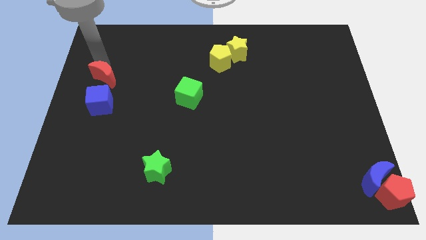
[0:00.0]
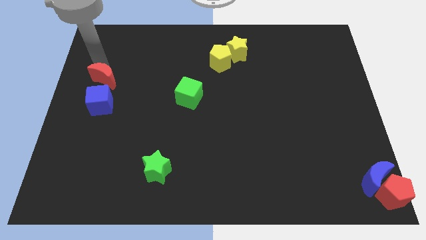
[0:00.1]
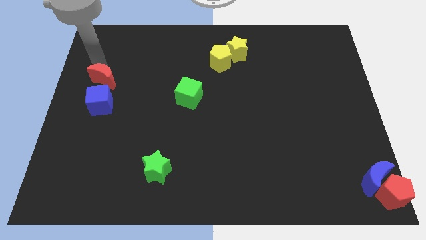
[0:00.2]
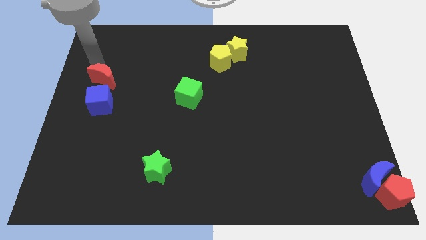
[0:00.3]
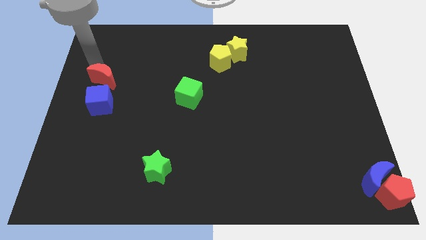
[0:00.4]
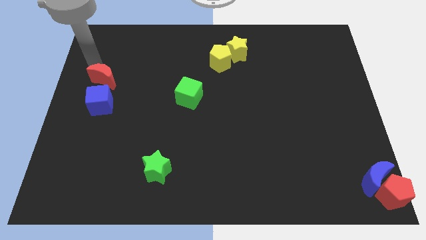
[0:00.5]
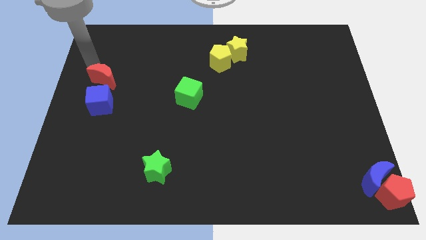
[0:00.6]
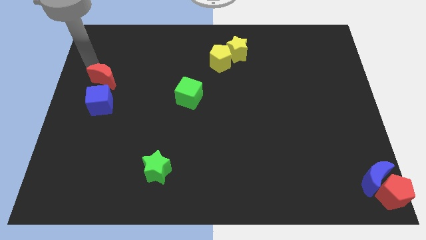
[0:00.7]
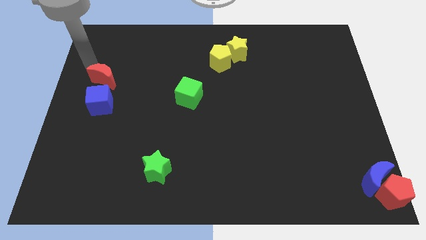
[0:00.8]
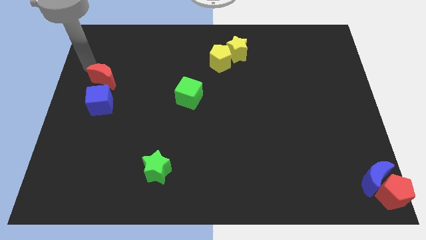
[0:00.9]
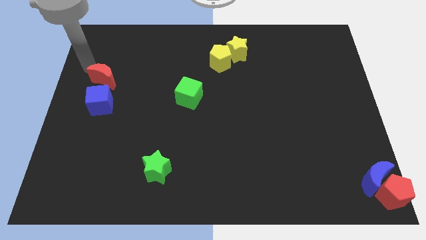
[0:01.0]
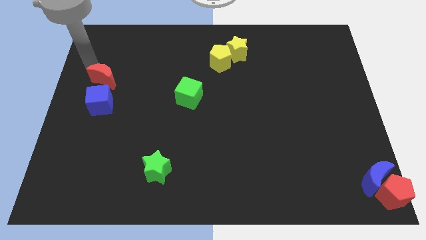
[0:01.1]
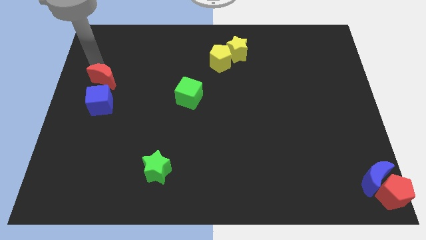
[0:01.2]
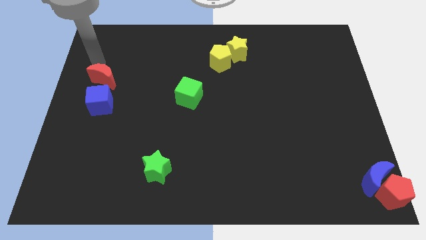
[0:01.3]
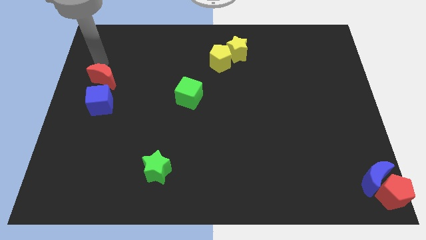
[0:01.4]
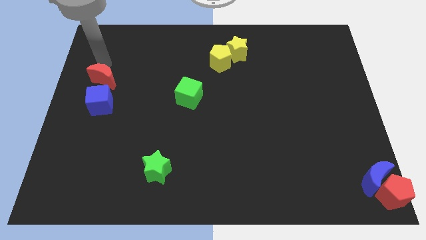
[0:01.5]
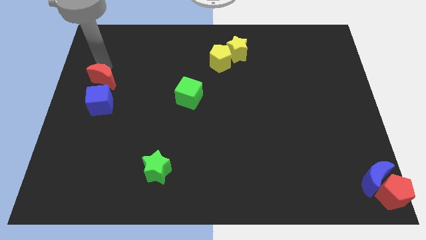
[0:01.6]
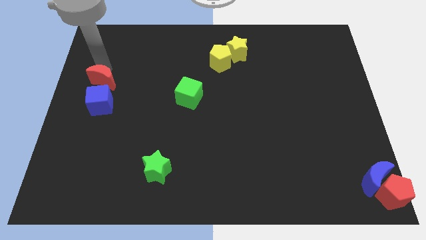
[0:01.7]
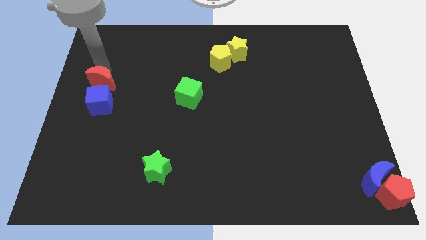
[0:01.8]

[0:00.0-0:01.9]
push the red moon close to the blue cube

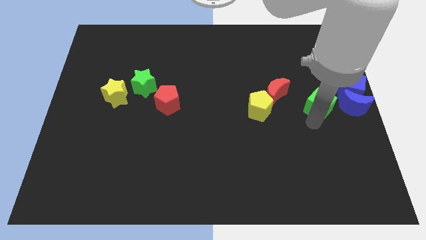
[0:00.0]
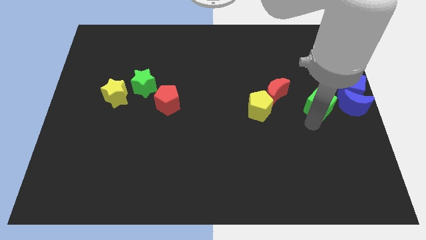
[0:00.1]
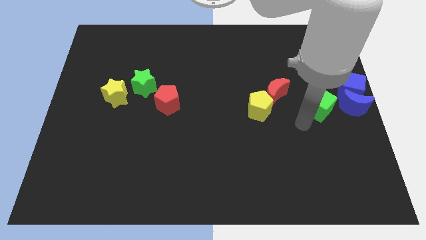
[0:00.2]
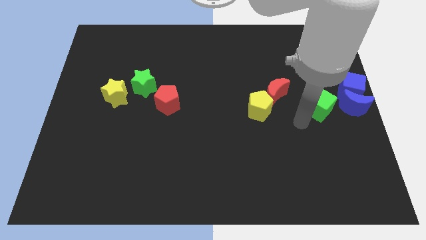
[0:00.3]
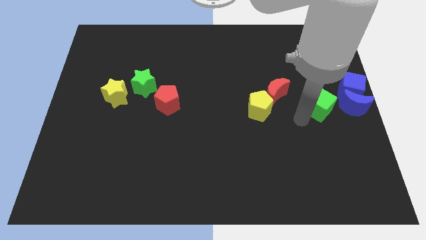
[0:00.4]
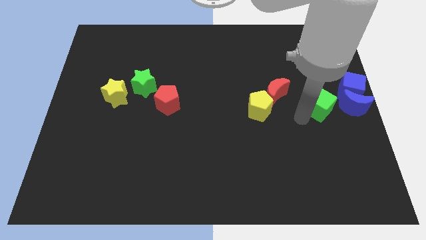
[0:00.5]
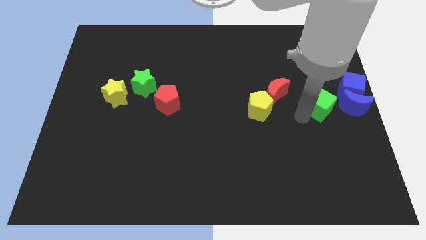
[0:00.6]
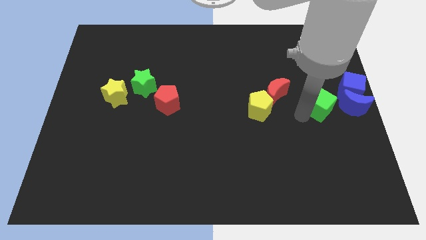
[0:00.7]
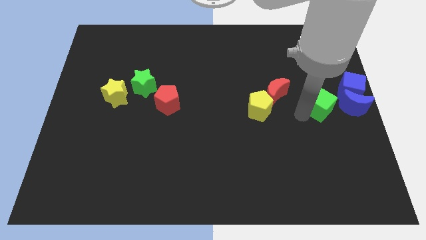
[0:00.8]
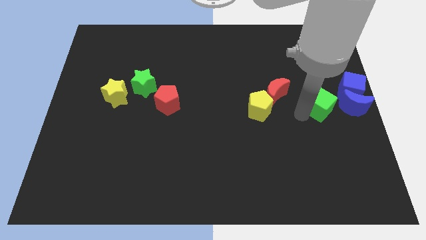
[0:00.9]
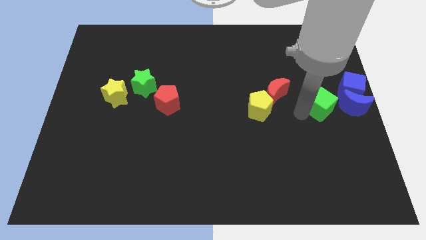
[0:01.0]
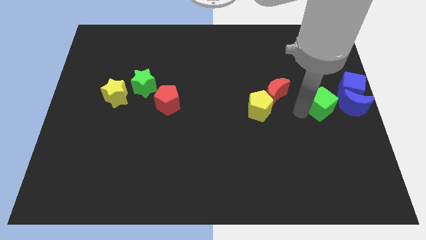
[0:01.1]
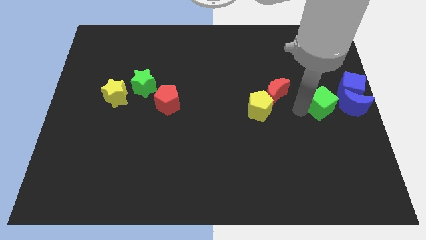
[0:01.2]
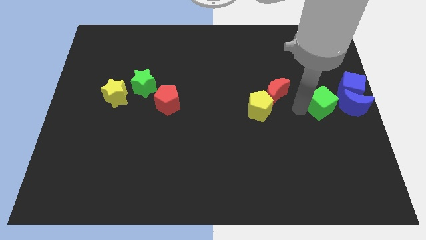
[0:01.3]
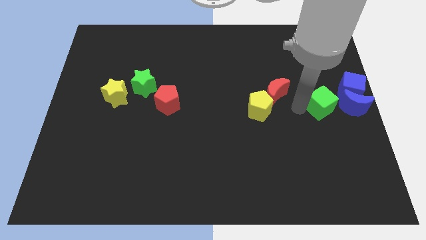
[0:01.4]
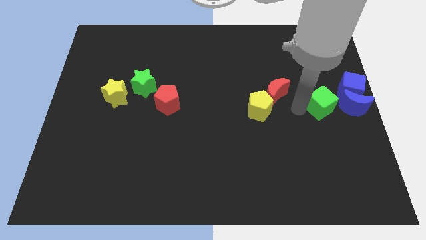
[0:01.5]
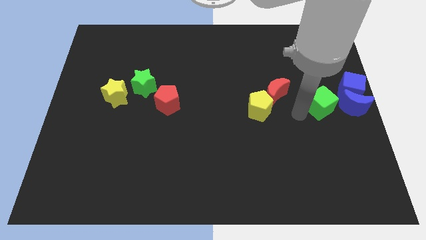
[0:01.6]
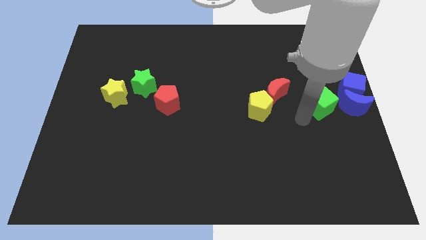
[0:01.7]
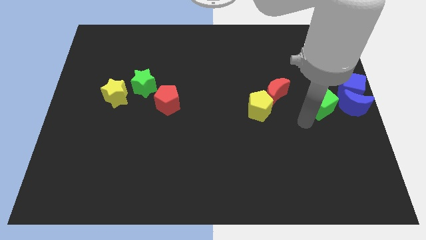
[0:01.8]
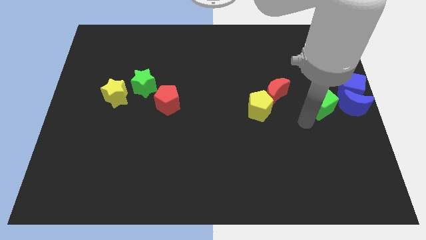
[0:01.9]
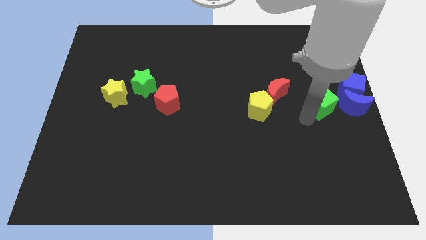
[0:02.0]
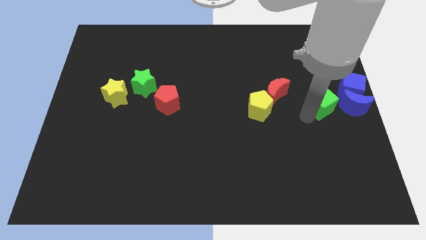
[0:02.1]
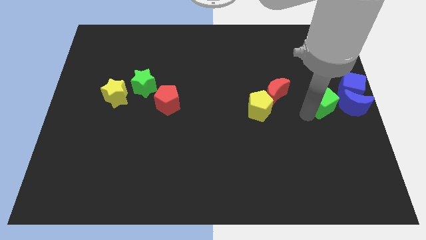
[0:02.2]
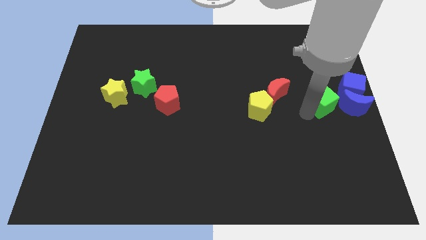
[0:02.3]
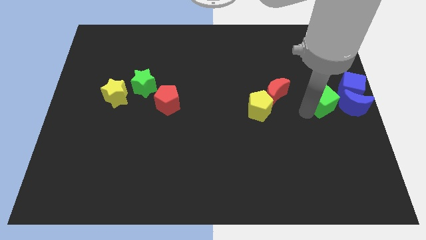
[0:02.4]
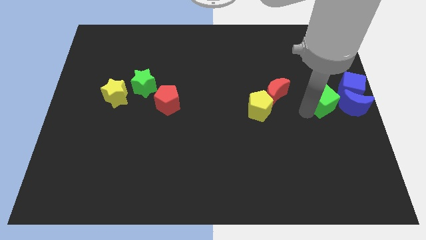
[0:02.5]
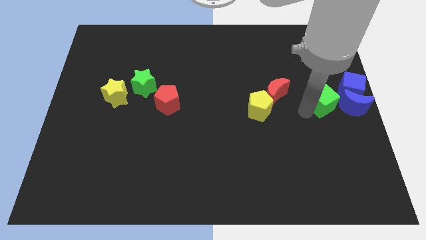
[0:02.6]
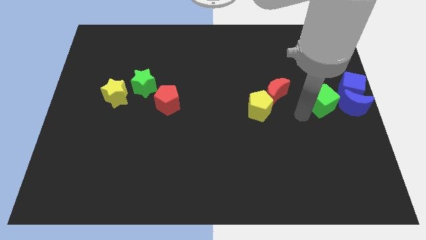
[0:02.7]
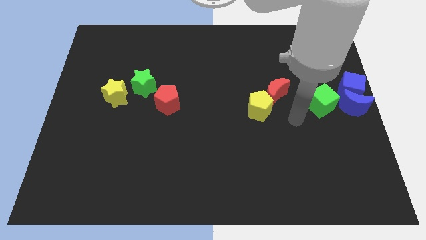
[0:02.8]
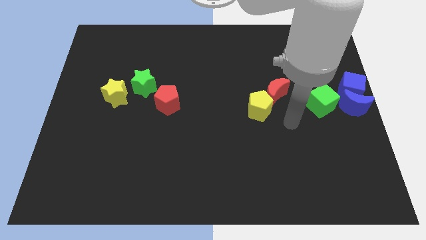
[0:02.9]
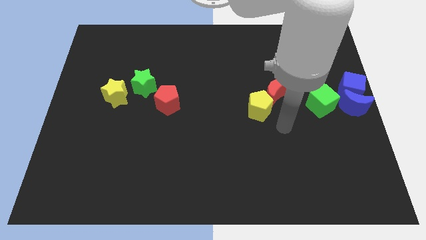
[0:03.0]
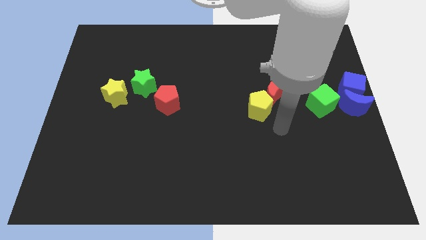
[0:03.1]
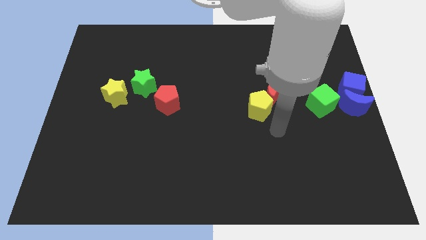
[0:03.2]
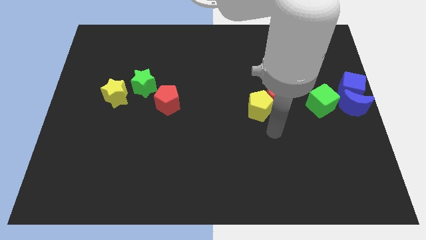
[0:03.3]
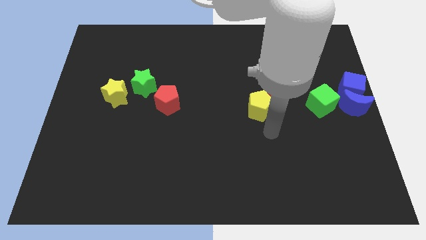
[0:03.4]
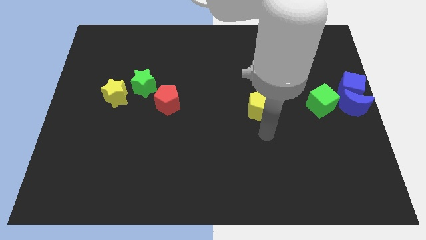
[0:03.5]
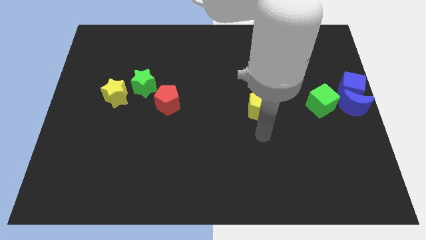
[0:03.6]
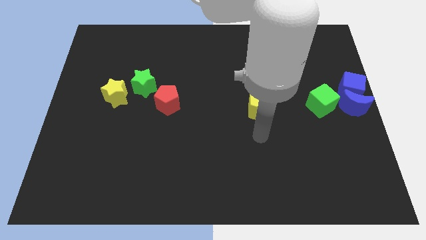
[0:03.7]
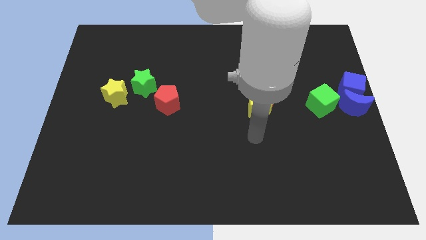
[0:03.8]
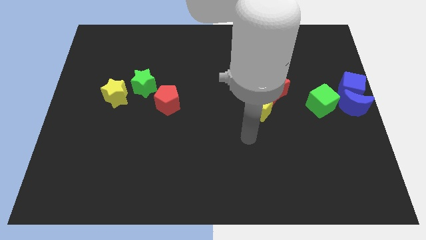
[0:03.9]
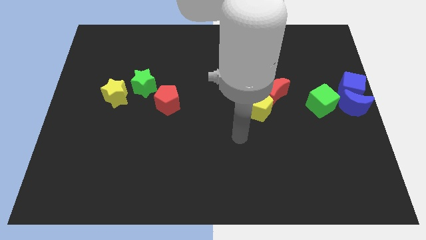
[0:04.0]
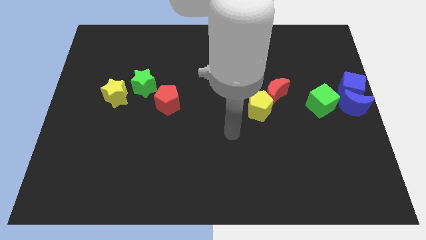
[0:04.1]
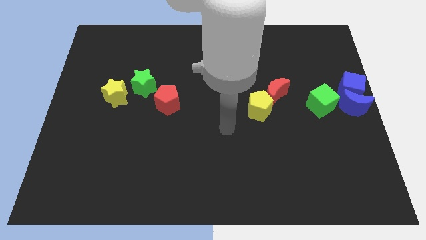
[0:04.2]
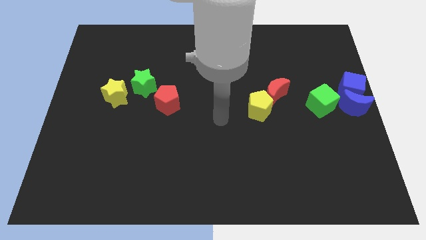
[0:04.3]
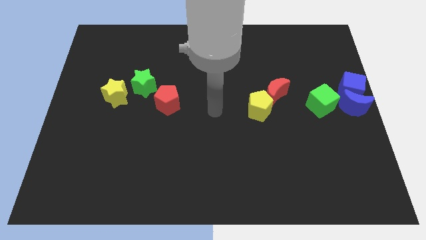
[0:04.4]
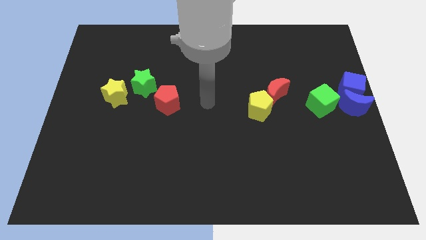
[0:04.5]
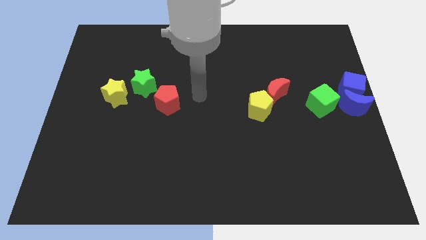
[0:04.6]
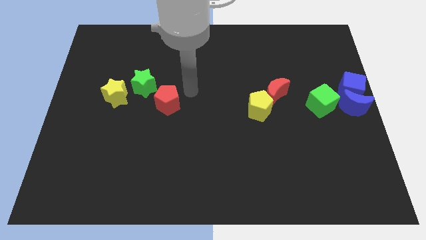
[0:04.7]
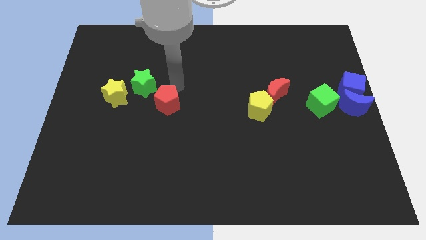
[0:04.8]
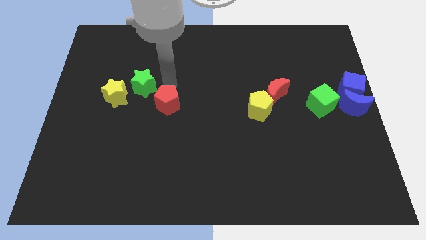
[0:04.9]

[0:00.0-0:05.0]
move your arm to the top side of the red pentagon

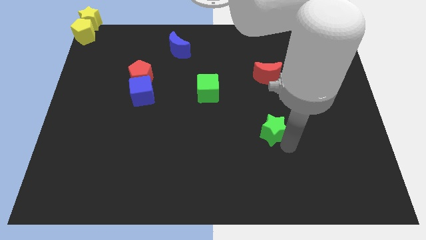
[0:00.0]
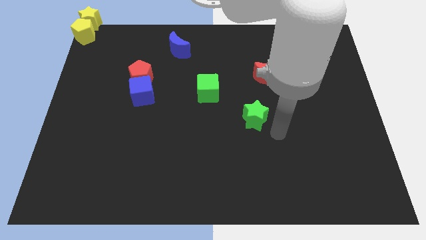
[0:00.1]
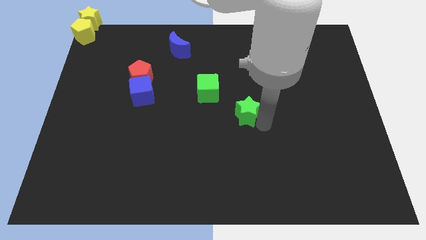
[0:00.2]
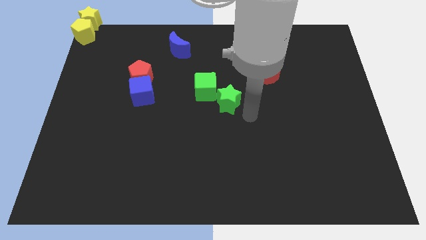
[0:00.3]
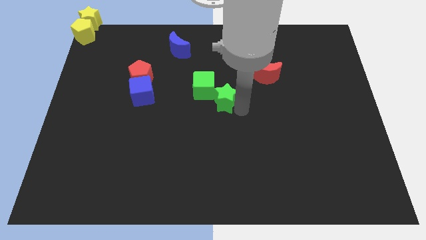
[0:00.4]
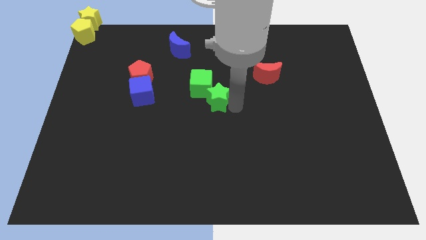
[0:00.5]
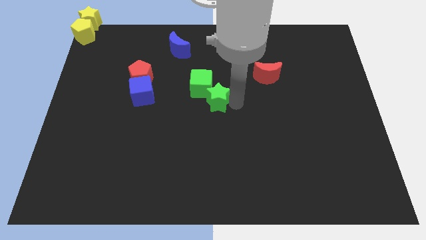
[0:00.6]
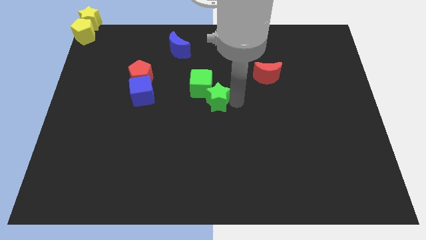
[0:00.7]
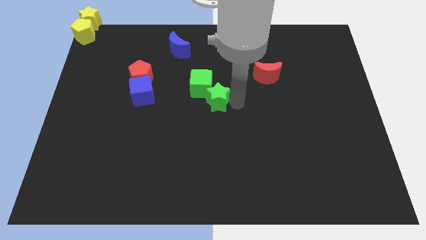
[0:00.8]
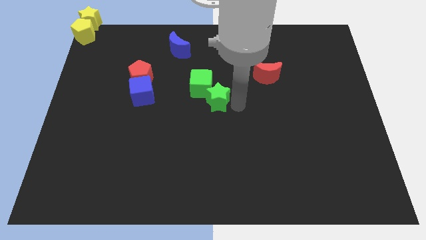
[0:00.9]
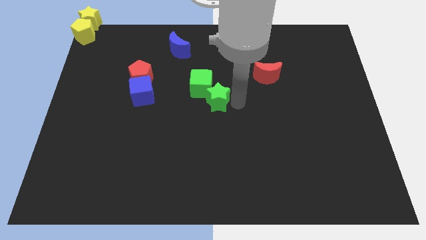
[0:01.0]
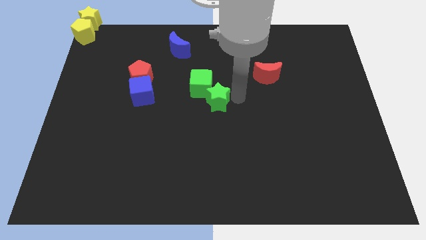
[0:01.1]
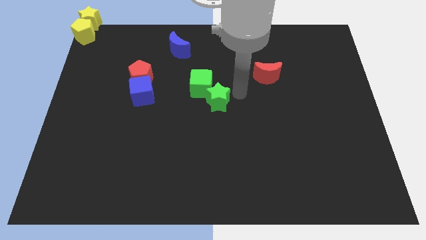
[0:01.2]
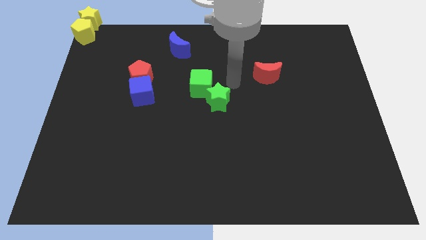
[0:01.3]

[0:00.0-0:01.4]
push the green star into the green cube

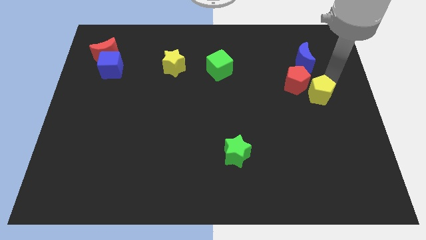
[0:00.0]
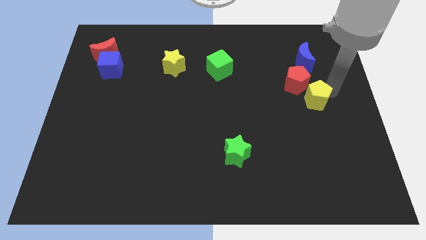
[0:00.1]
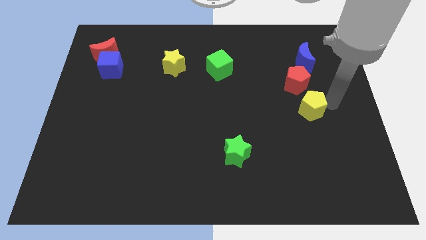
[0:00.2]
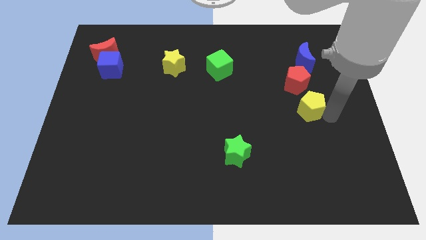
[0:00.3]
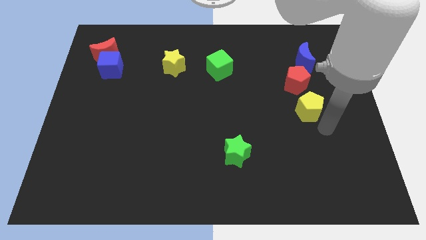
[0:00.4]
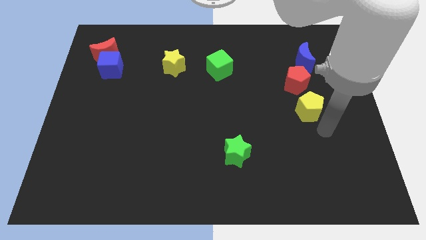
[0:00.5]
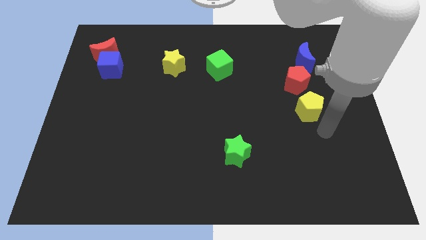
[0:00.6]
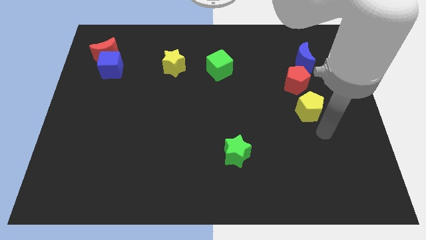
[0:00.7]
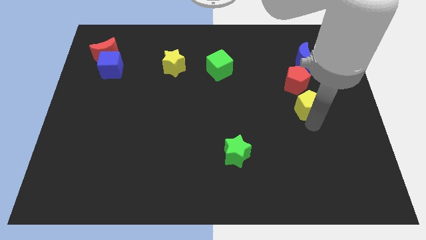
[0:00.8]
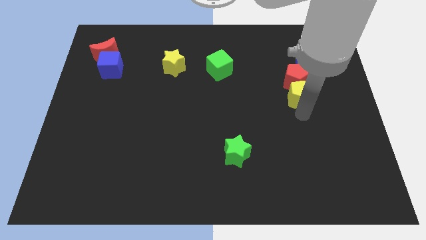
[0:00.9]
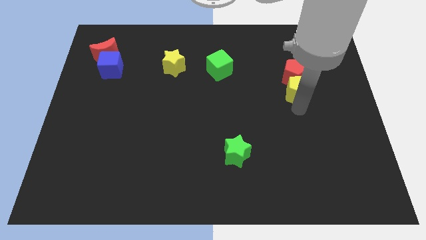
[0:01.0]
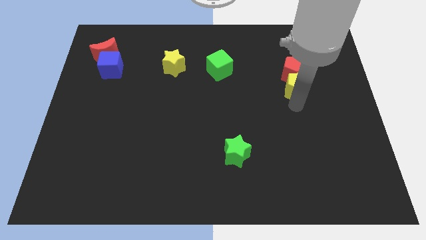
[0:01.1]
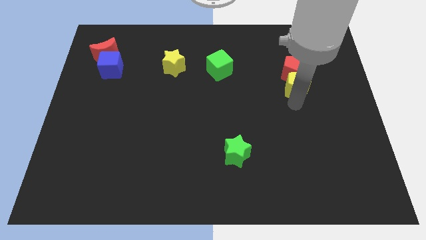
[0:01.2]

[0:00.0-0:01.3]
place the yellow pentagon below the red pentagon
